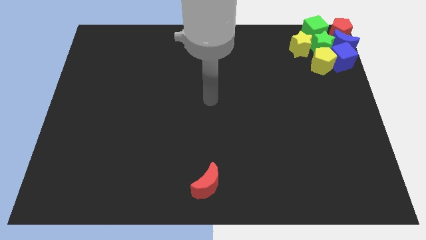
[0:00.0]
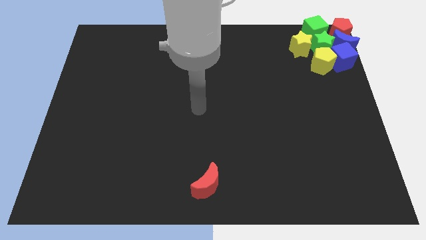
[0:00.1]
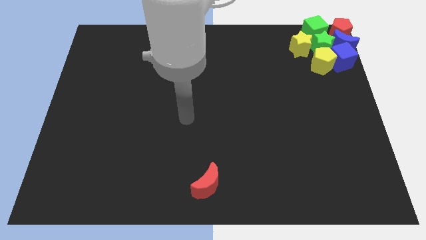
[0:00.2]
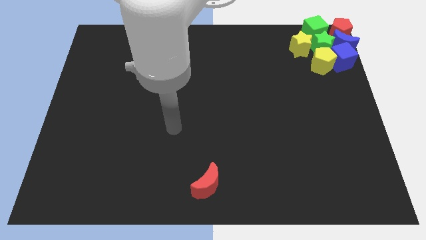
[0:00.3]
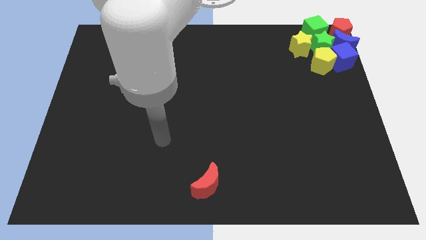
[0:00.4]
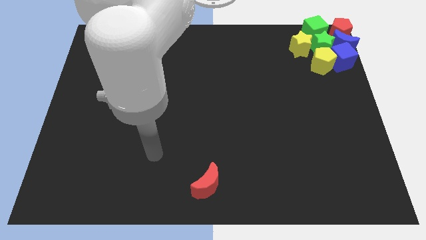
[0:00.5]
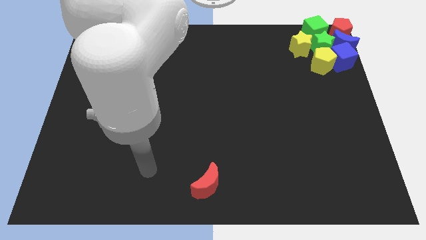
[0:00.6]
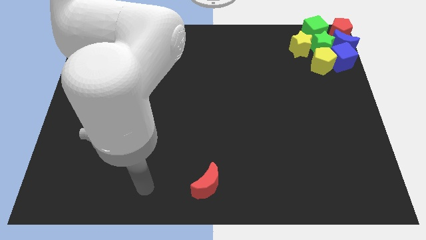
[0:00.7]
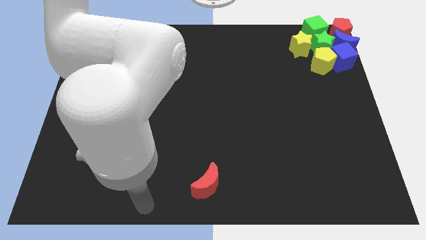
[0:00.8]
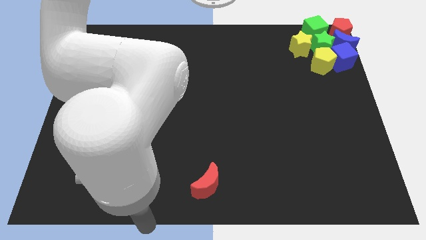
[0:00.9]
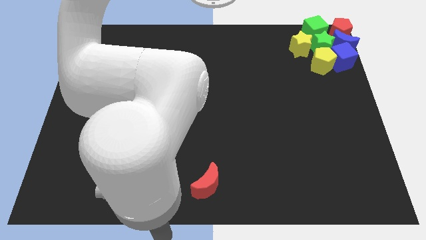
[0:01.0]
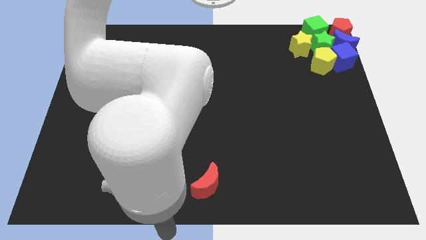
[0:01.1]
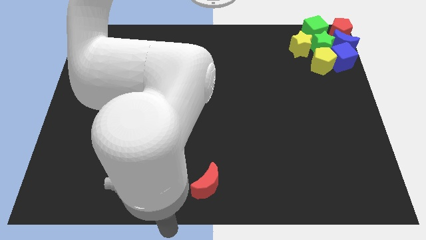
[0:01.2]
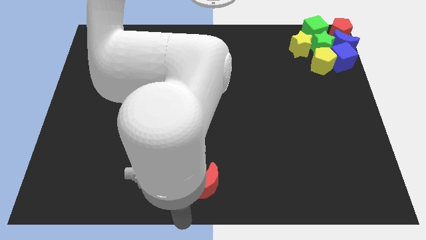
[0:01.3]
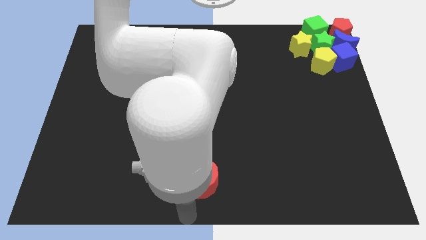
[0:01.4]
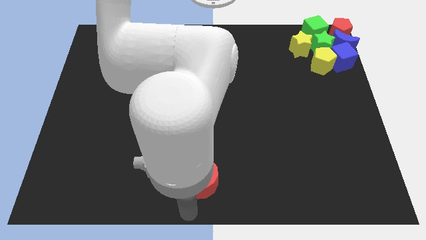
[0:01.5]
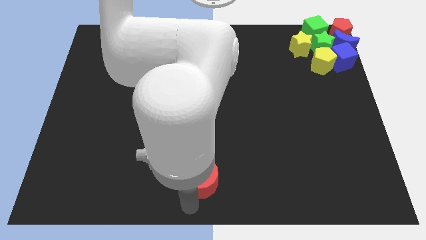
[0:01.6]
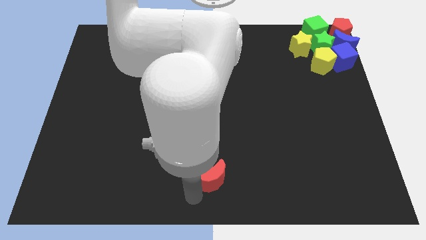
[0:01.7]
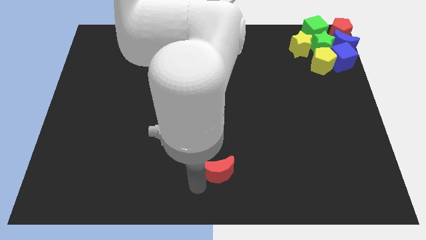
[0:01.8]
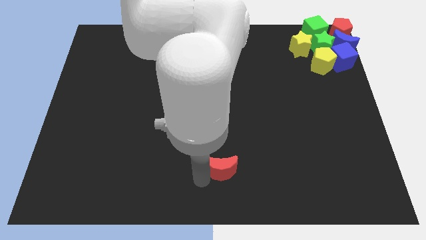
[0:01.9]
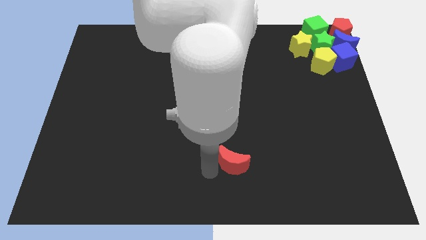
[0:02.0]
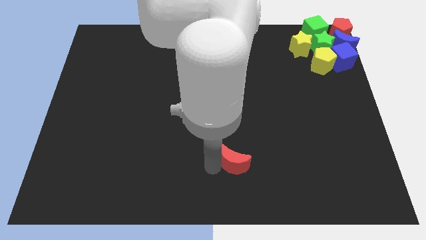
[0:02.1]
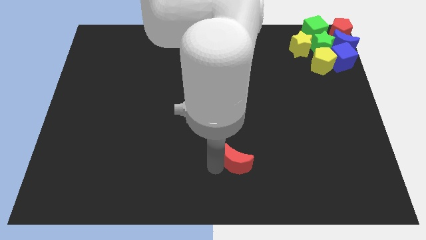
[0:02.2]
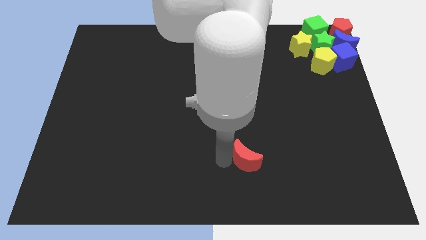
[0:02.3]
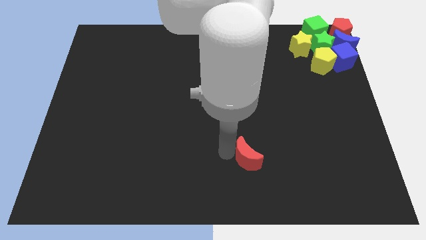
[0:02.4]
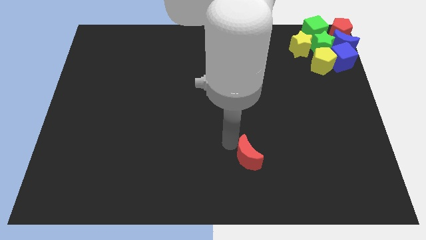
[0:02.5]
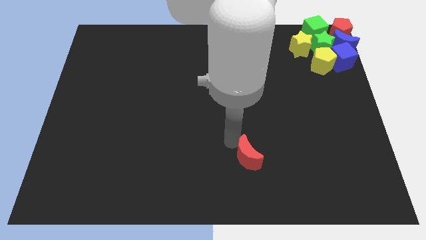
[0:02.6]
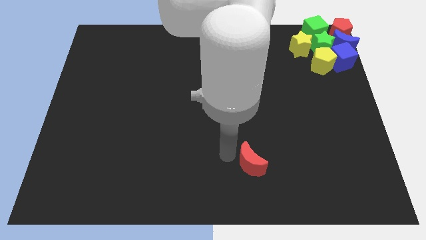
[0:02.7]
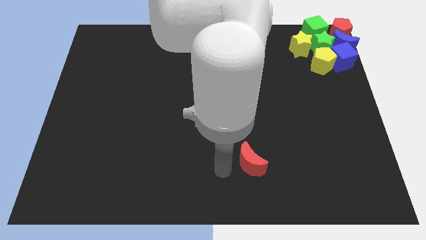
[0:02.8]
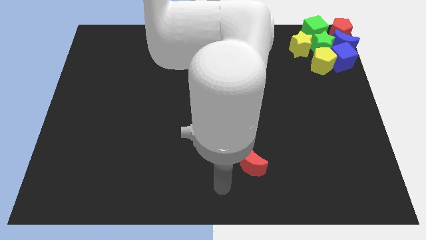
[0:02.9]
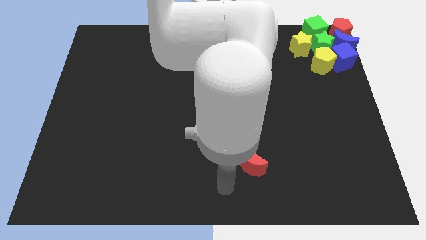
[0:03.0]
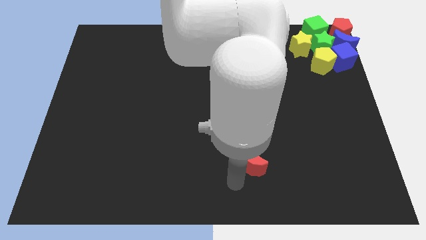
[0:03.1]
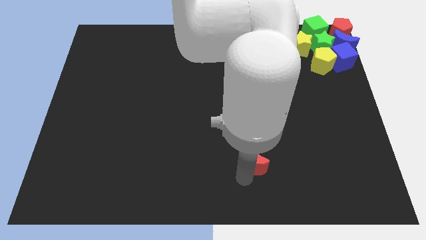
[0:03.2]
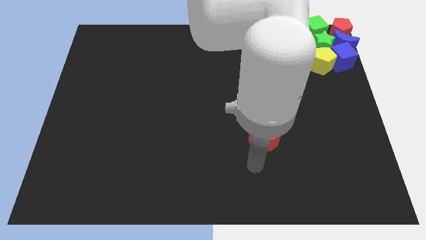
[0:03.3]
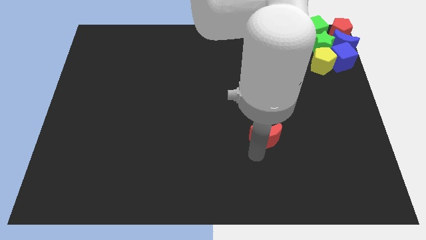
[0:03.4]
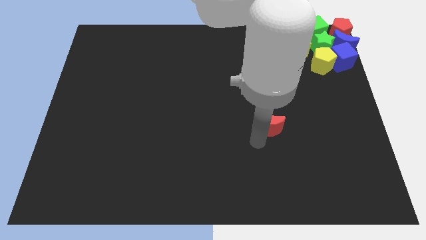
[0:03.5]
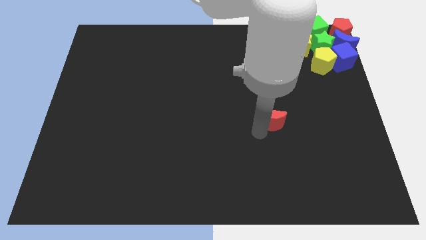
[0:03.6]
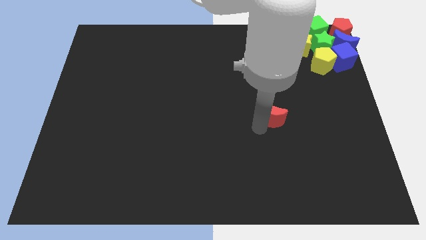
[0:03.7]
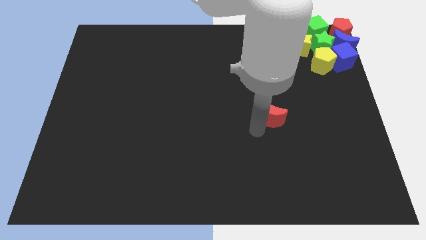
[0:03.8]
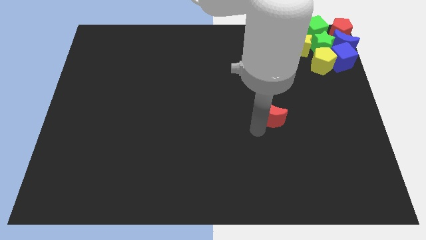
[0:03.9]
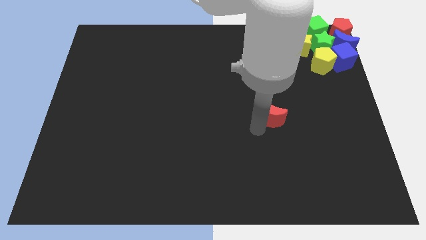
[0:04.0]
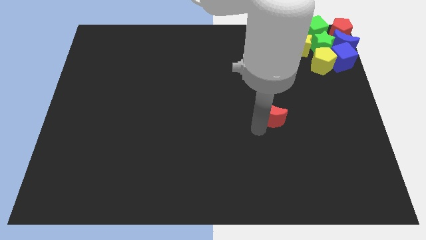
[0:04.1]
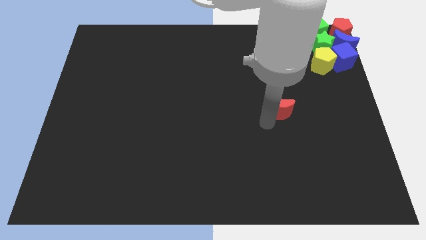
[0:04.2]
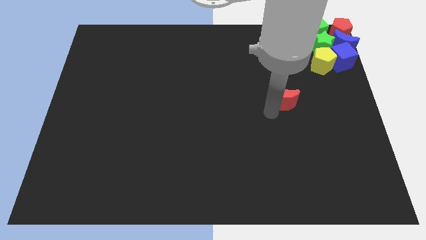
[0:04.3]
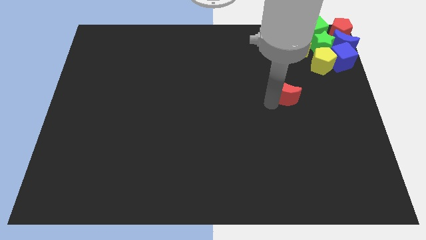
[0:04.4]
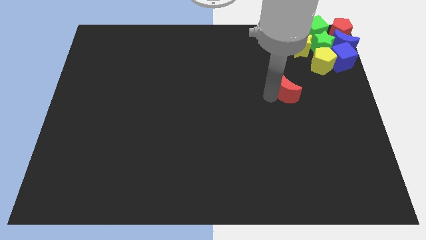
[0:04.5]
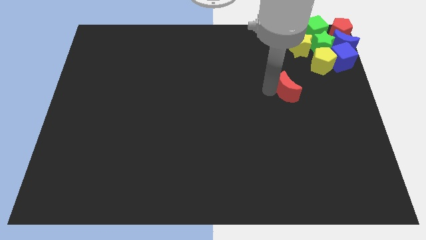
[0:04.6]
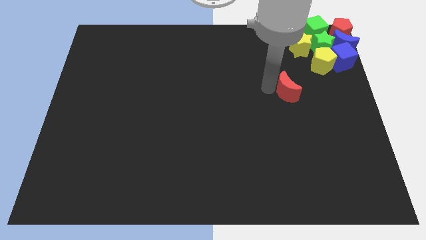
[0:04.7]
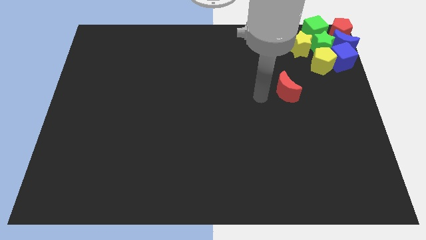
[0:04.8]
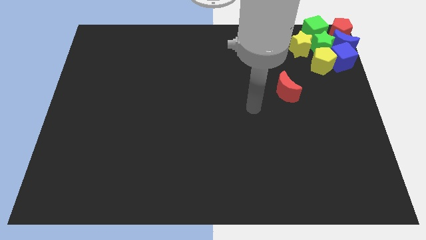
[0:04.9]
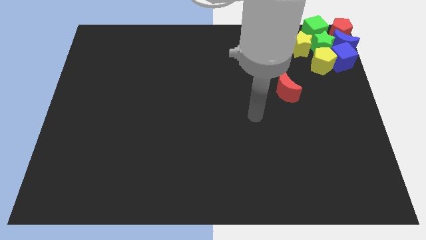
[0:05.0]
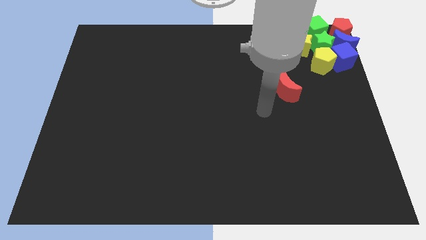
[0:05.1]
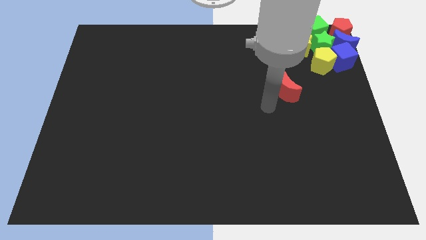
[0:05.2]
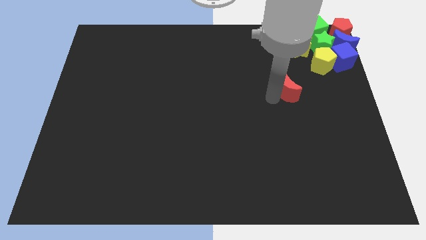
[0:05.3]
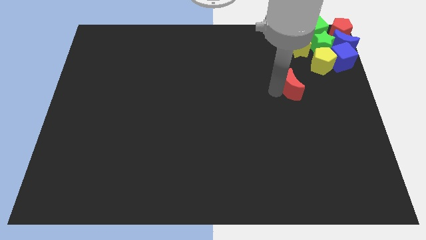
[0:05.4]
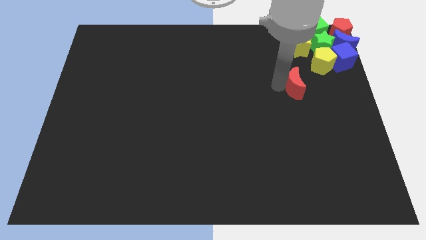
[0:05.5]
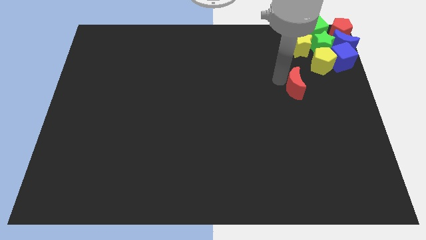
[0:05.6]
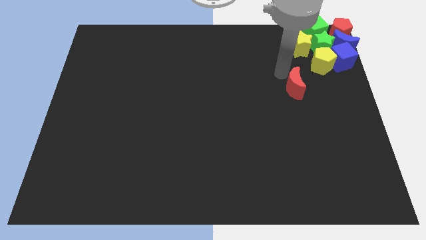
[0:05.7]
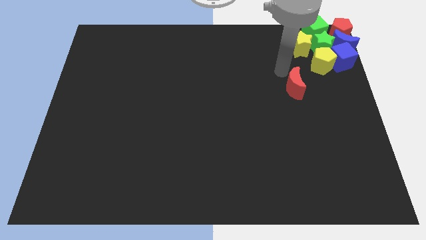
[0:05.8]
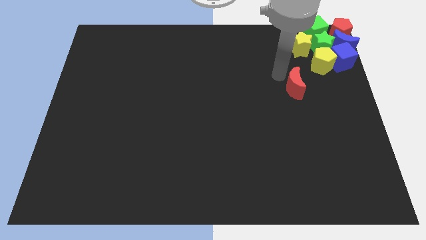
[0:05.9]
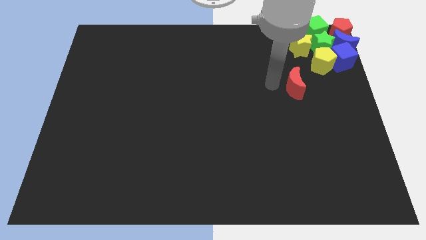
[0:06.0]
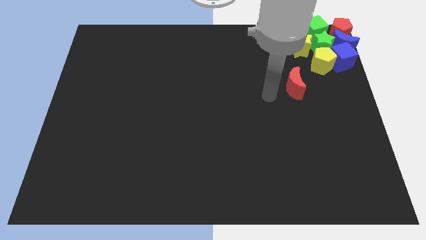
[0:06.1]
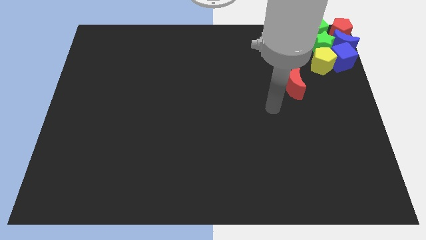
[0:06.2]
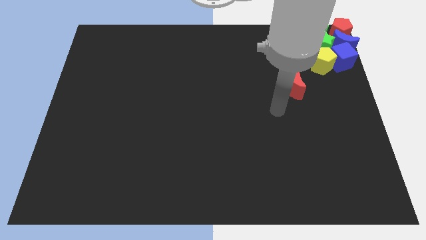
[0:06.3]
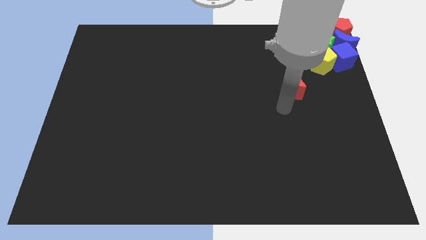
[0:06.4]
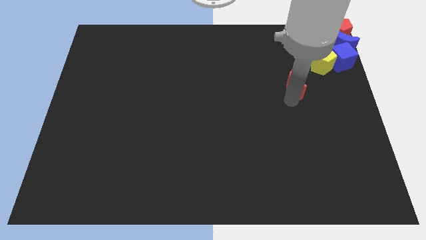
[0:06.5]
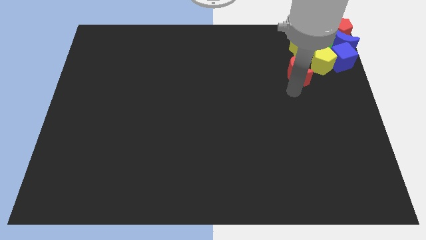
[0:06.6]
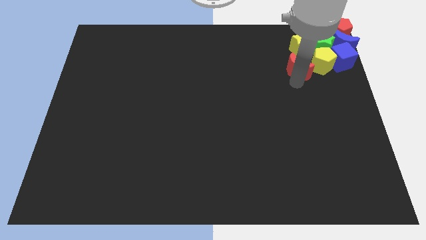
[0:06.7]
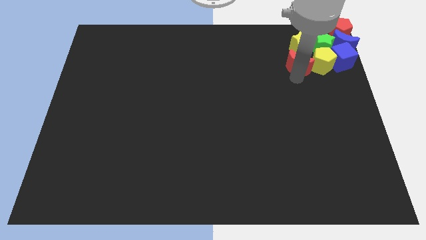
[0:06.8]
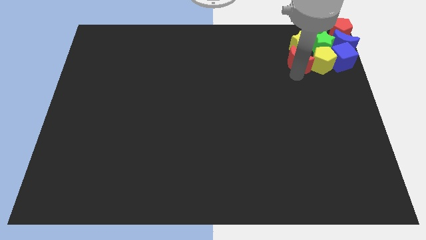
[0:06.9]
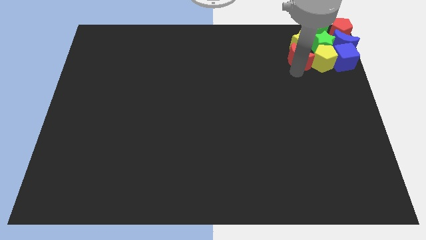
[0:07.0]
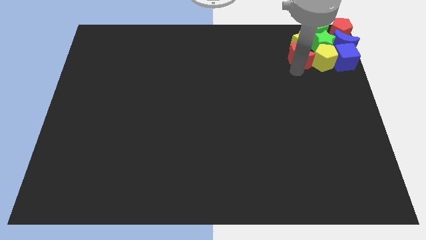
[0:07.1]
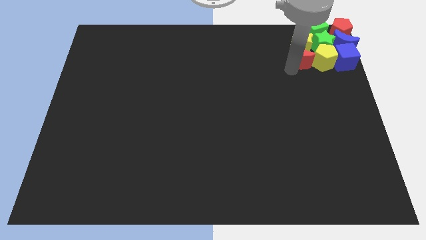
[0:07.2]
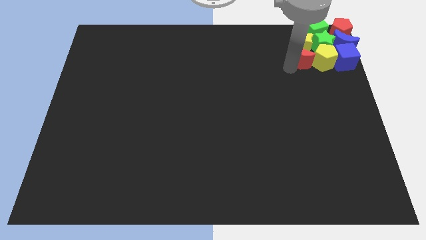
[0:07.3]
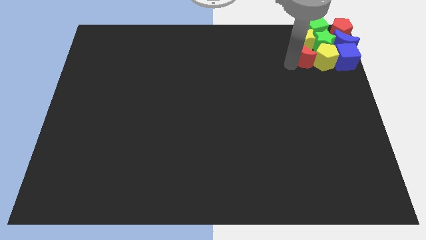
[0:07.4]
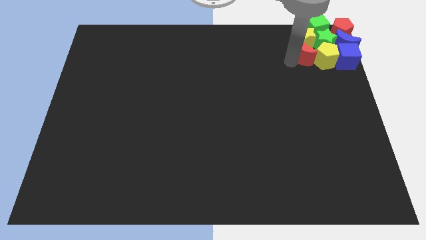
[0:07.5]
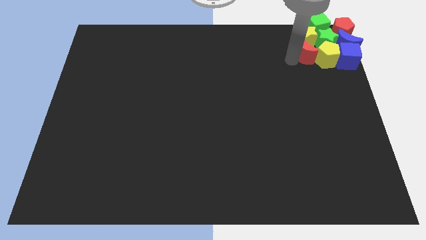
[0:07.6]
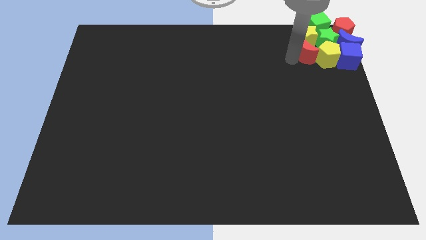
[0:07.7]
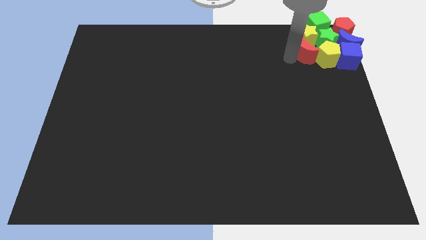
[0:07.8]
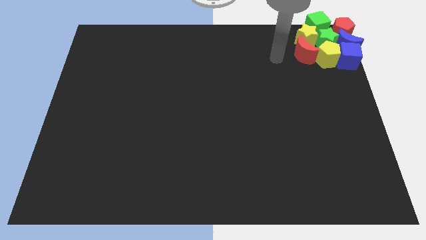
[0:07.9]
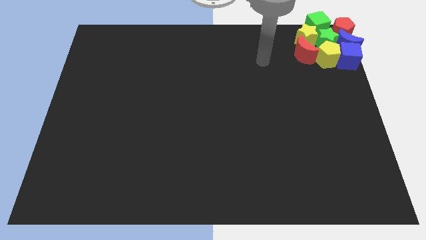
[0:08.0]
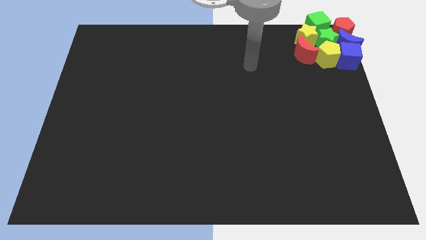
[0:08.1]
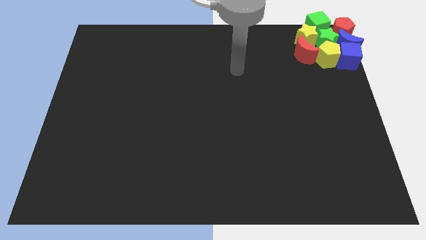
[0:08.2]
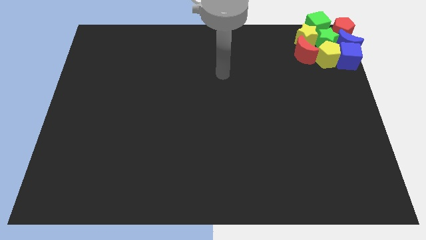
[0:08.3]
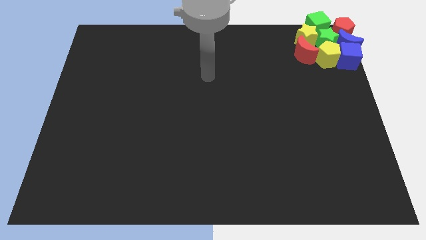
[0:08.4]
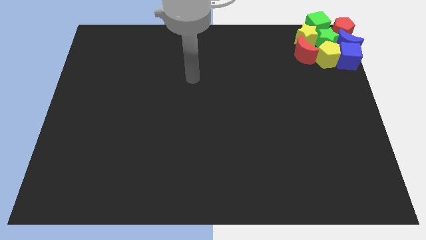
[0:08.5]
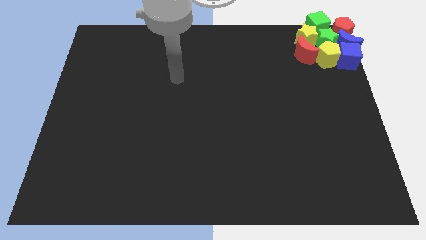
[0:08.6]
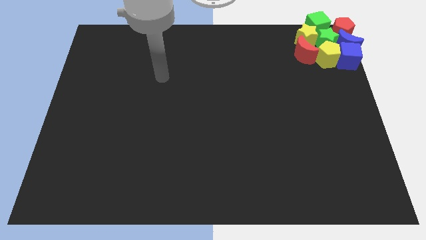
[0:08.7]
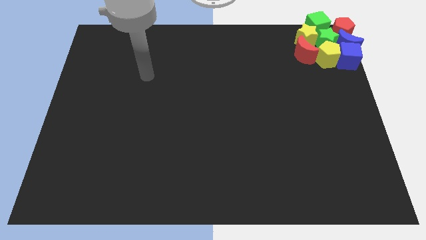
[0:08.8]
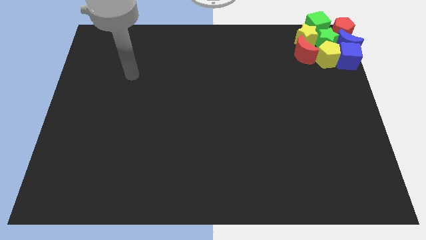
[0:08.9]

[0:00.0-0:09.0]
move the red crescent into the group of blocks

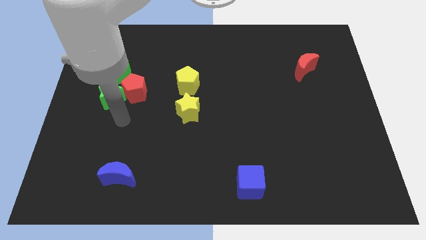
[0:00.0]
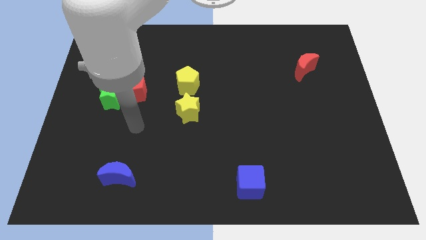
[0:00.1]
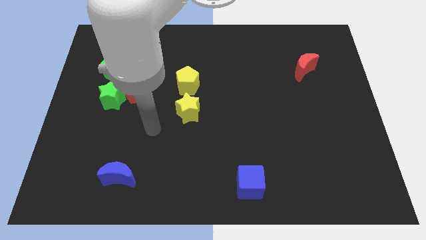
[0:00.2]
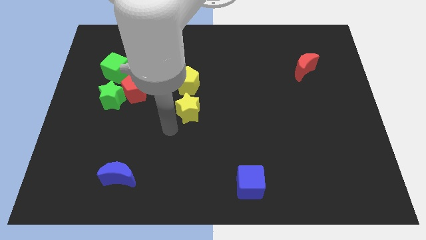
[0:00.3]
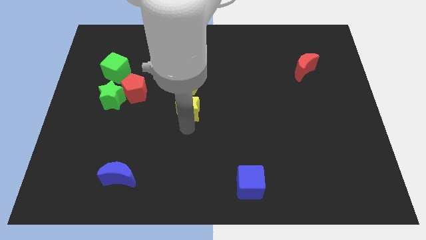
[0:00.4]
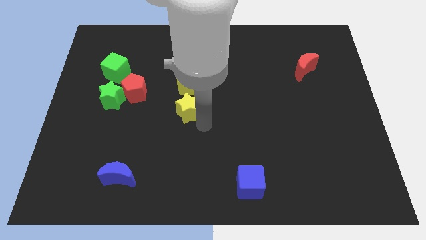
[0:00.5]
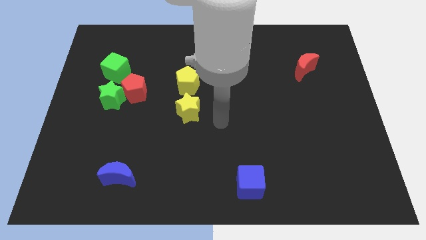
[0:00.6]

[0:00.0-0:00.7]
move your arm to the center of the board
